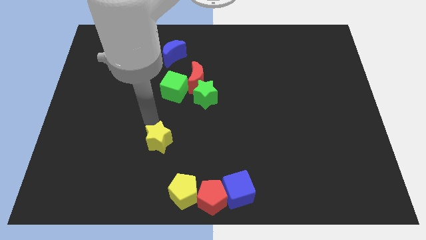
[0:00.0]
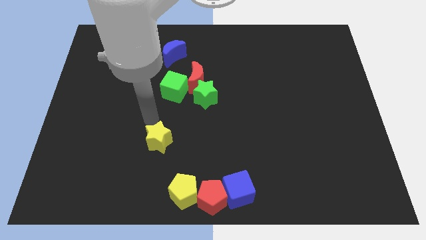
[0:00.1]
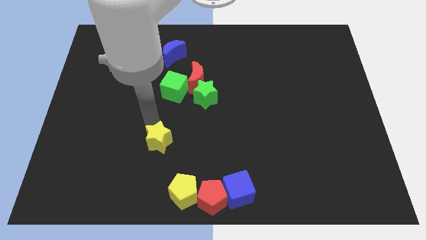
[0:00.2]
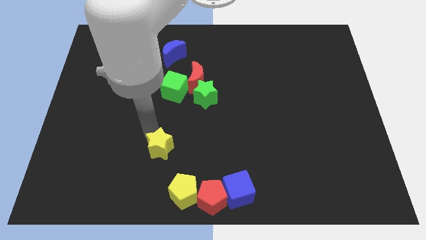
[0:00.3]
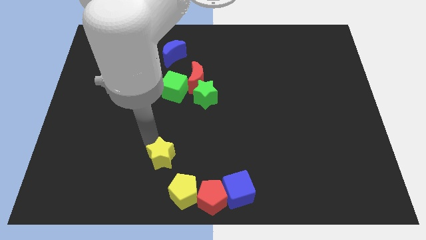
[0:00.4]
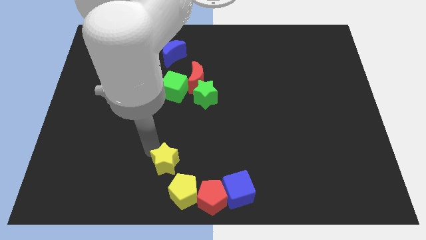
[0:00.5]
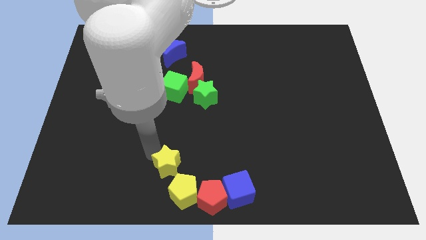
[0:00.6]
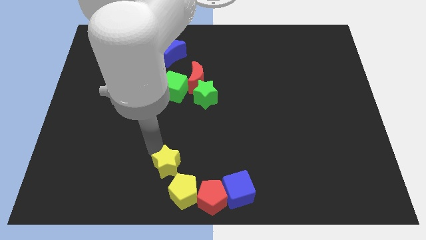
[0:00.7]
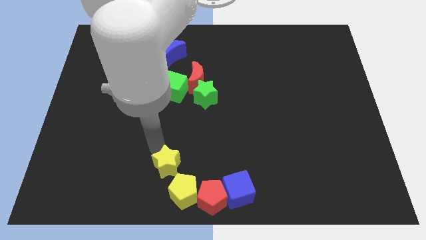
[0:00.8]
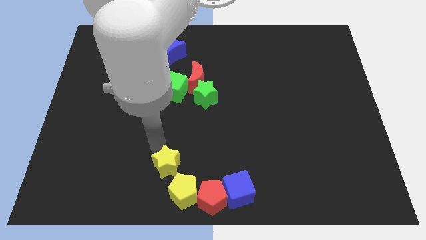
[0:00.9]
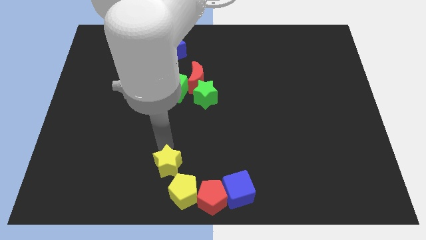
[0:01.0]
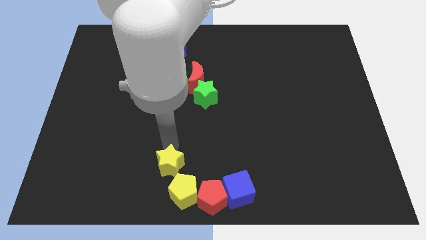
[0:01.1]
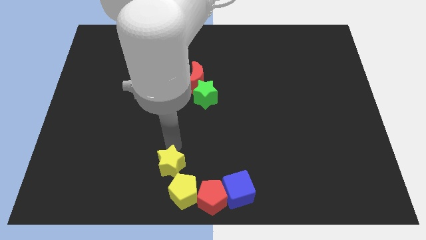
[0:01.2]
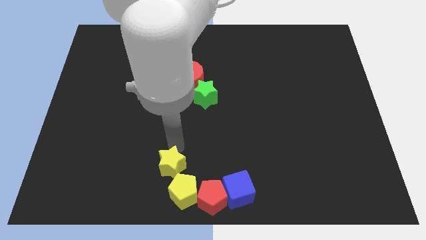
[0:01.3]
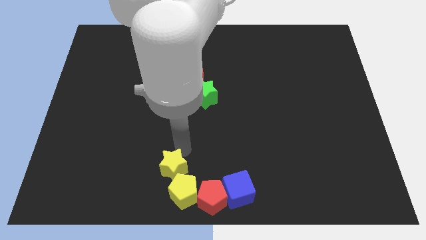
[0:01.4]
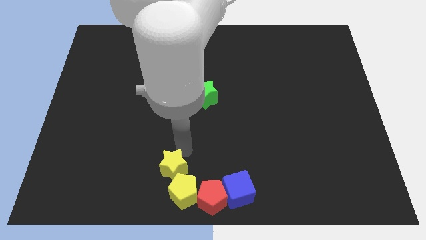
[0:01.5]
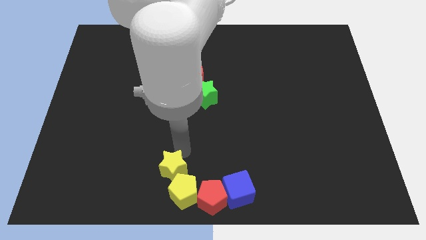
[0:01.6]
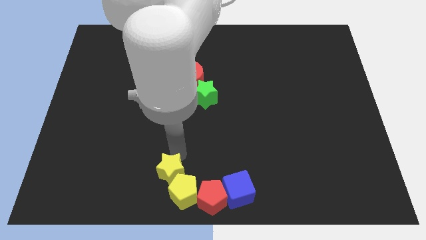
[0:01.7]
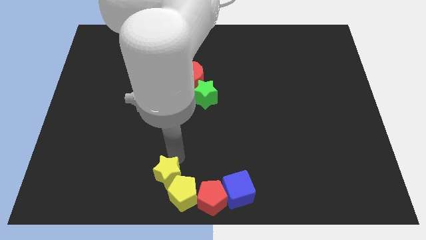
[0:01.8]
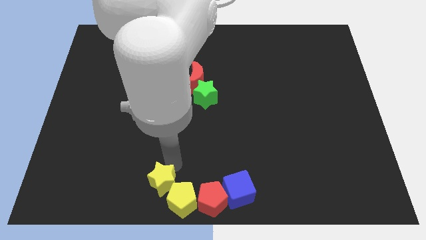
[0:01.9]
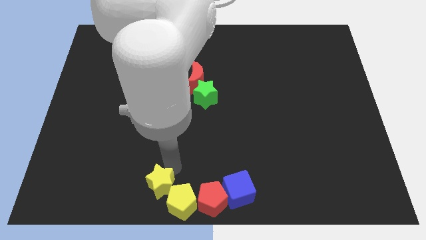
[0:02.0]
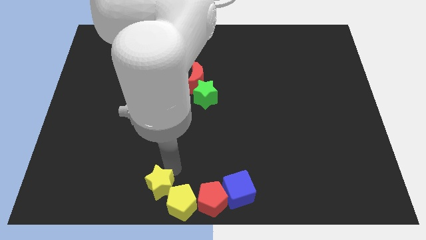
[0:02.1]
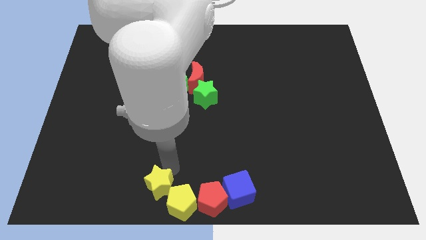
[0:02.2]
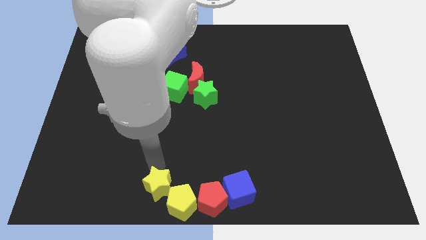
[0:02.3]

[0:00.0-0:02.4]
push the yellow star top left to the yellow pentagon

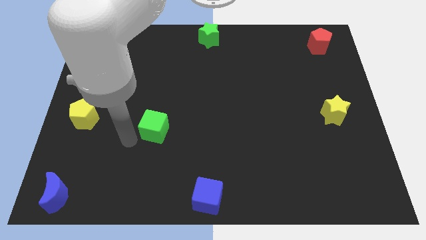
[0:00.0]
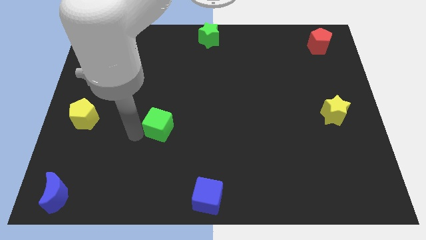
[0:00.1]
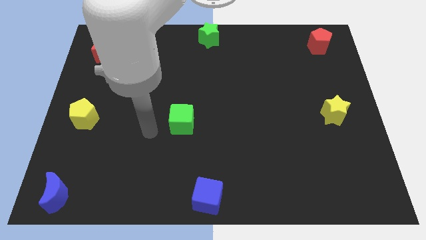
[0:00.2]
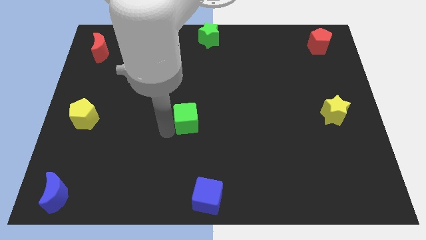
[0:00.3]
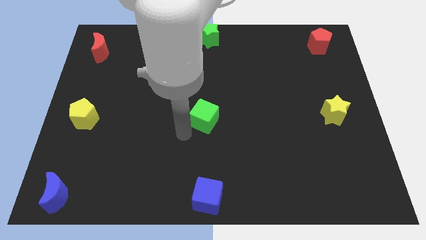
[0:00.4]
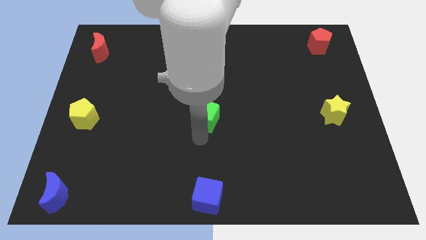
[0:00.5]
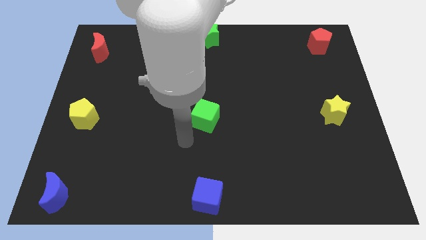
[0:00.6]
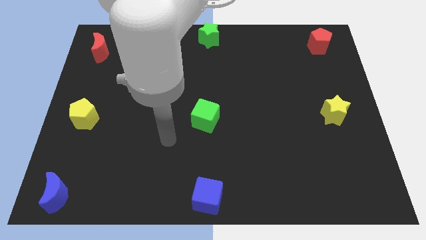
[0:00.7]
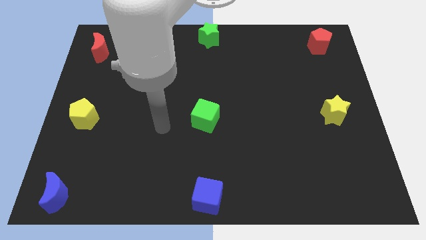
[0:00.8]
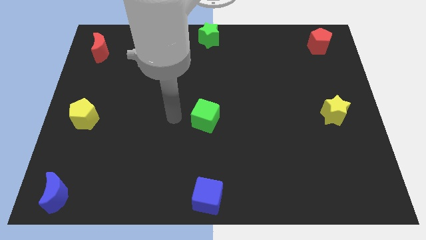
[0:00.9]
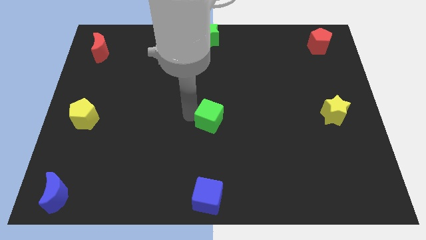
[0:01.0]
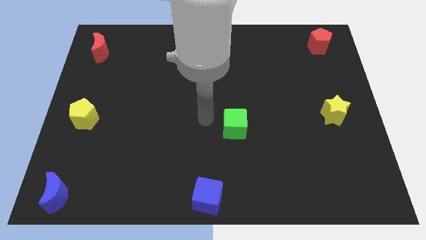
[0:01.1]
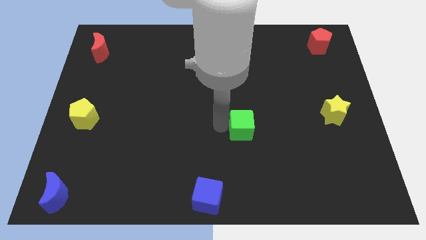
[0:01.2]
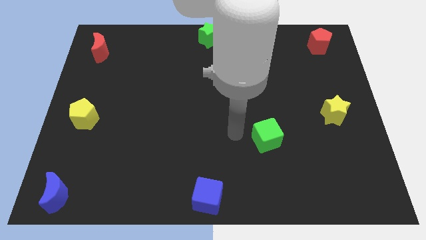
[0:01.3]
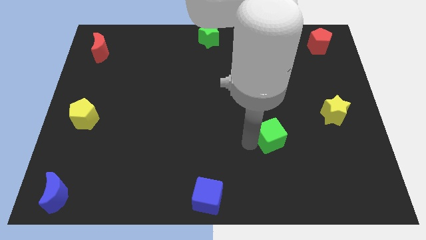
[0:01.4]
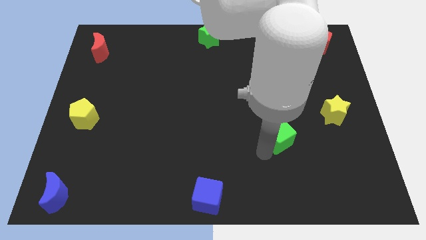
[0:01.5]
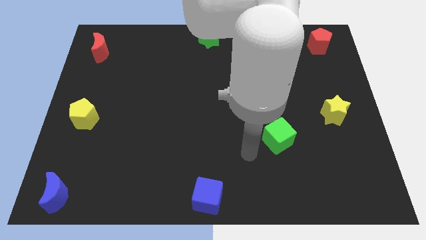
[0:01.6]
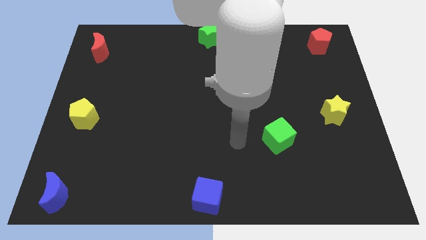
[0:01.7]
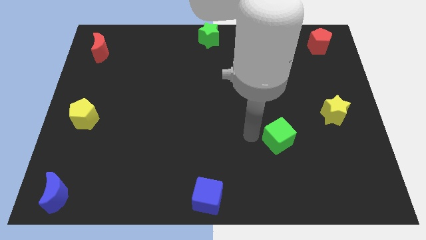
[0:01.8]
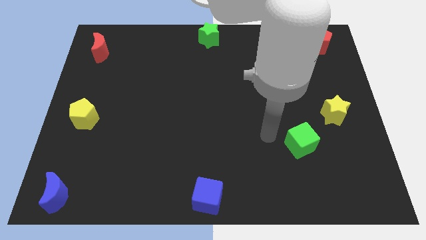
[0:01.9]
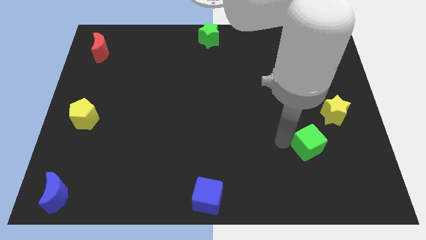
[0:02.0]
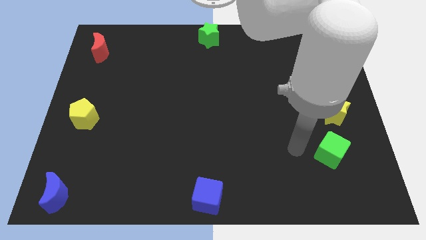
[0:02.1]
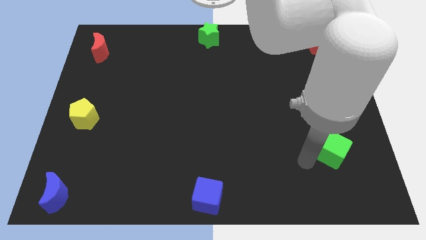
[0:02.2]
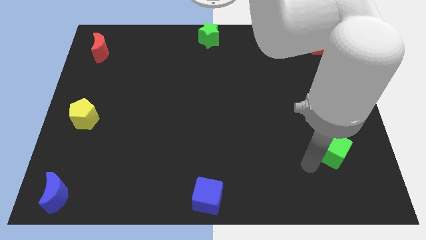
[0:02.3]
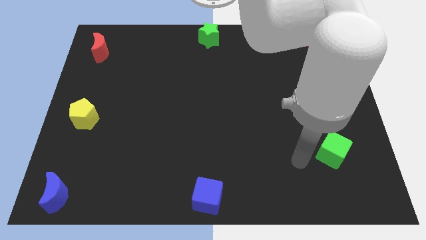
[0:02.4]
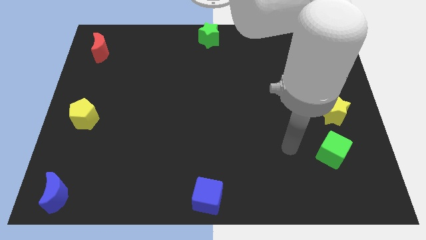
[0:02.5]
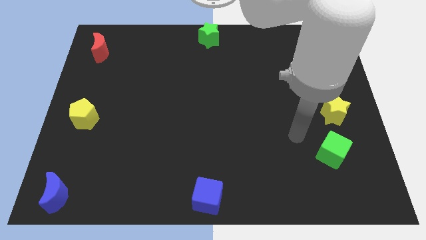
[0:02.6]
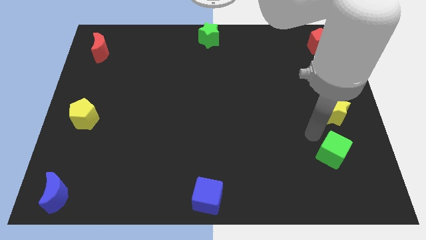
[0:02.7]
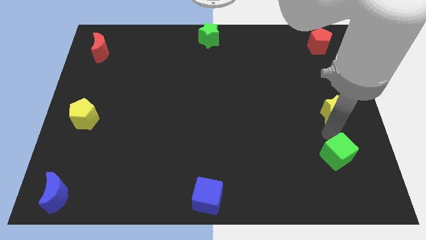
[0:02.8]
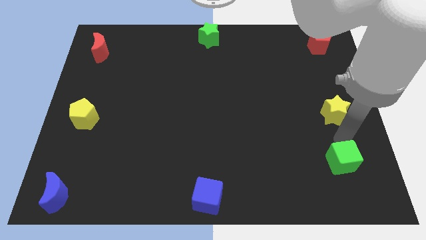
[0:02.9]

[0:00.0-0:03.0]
place green cube vertical to yellow star

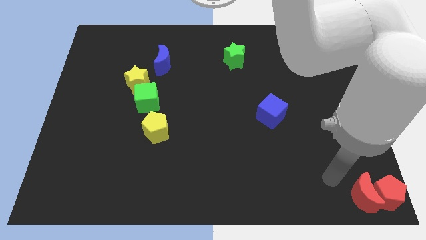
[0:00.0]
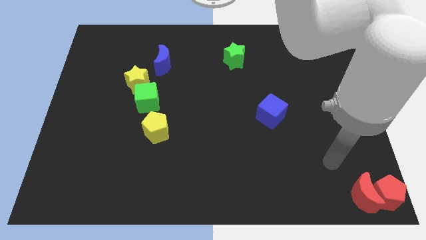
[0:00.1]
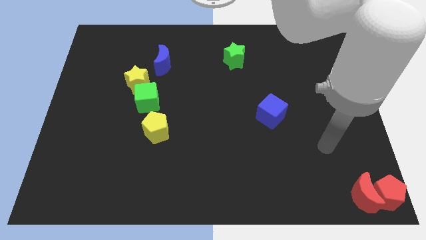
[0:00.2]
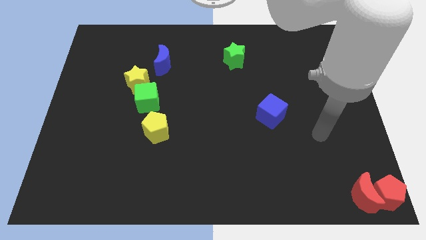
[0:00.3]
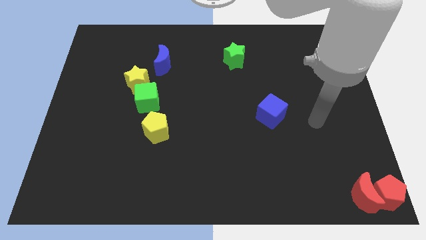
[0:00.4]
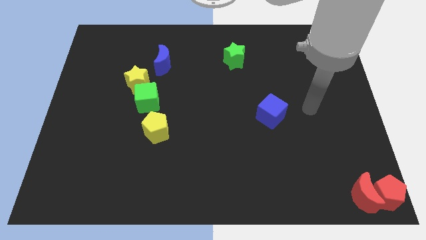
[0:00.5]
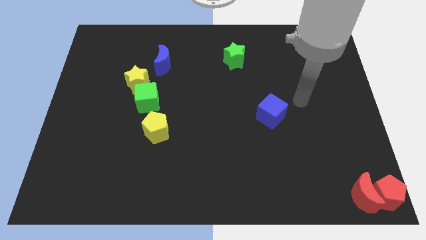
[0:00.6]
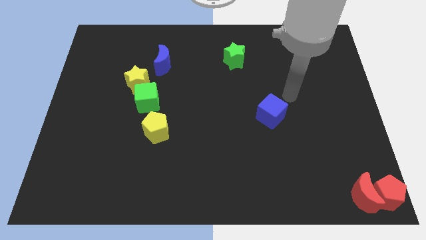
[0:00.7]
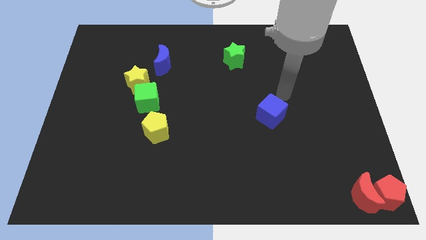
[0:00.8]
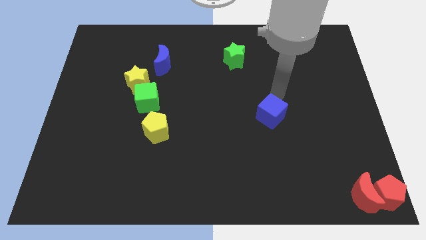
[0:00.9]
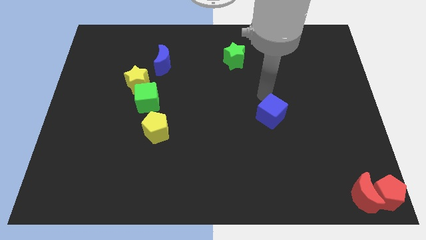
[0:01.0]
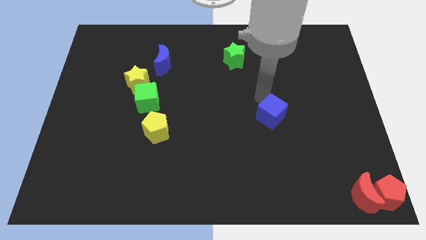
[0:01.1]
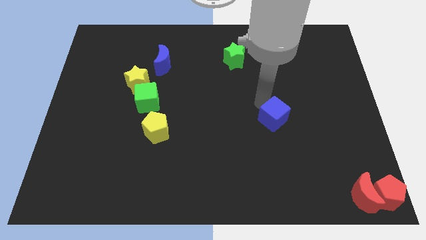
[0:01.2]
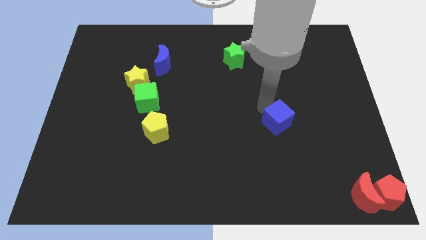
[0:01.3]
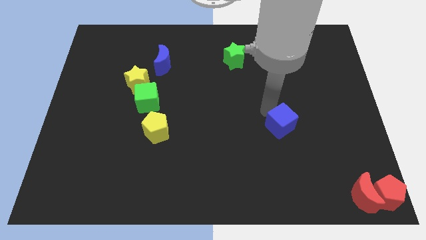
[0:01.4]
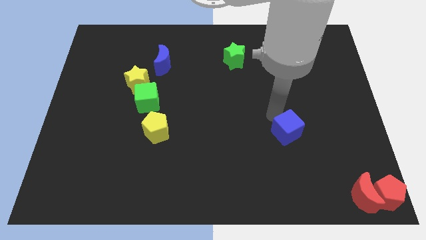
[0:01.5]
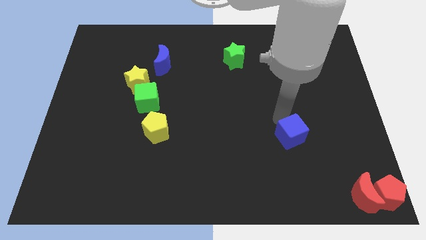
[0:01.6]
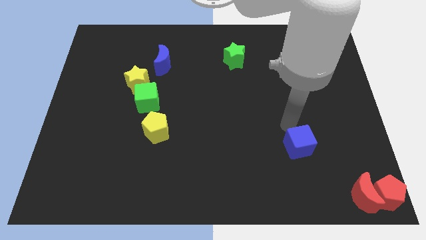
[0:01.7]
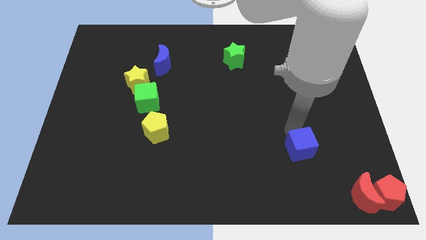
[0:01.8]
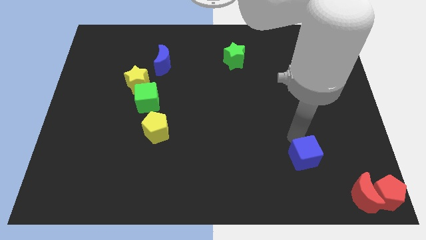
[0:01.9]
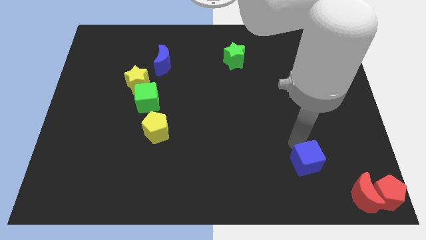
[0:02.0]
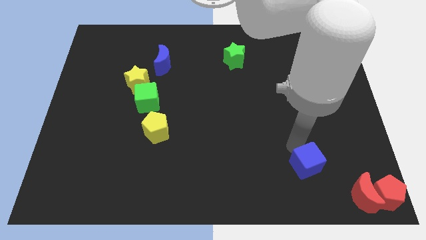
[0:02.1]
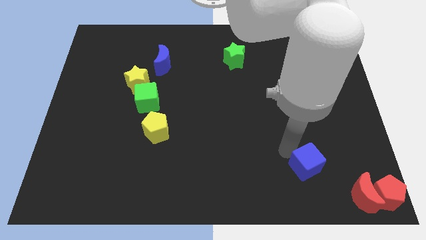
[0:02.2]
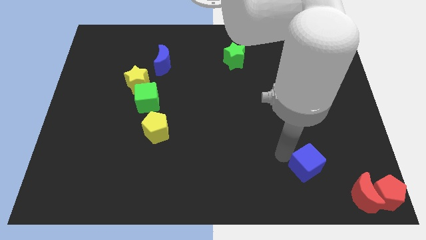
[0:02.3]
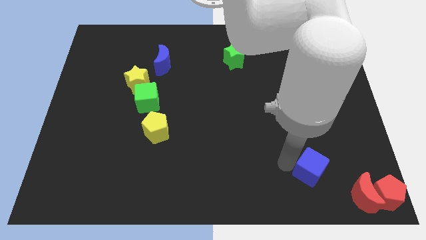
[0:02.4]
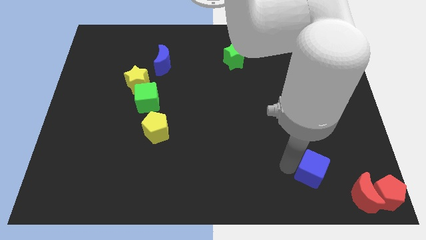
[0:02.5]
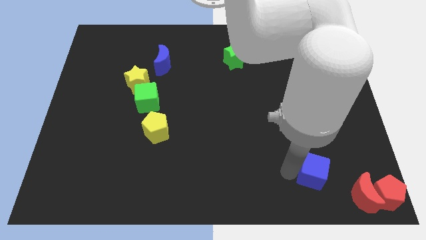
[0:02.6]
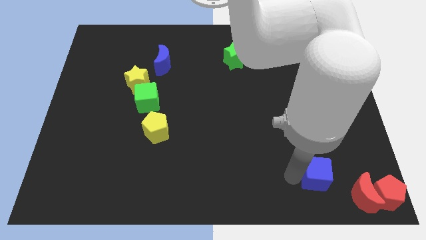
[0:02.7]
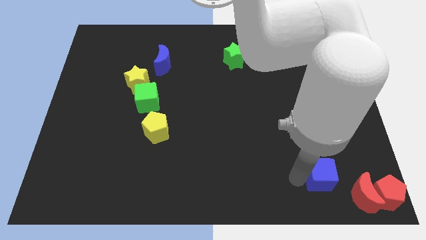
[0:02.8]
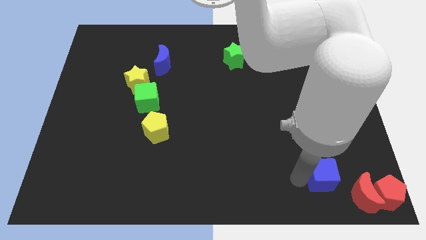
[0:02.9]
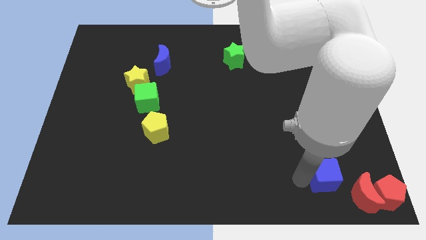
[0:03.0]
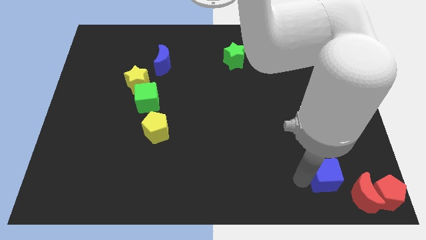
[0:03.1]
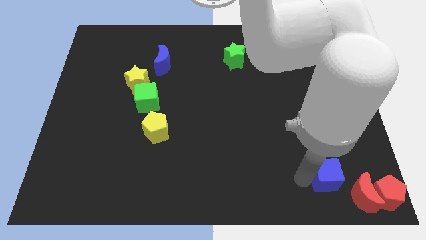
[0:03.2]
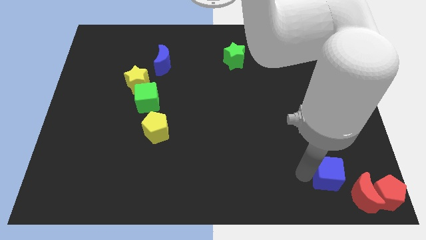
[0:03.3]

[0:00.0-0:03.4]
push the blue cube towards the left side of the red moon

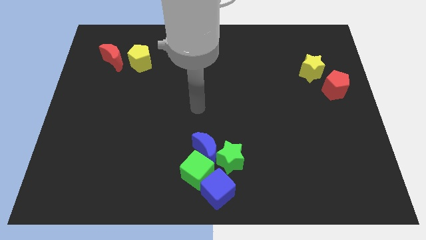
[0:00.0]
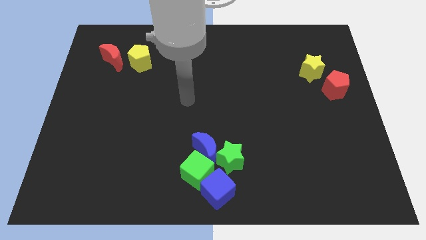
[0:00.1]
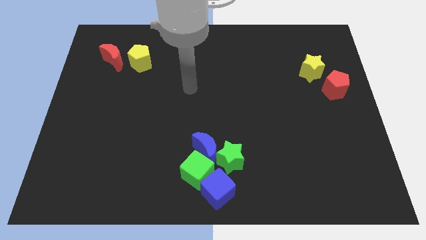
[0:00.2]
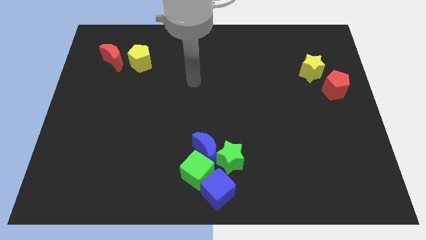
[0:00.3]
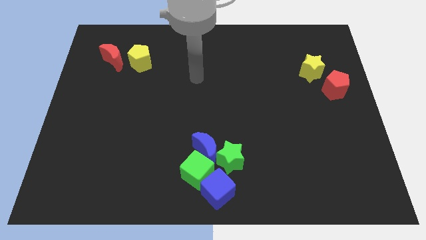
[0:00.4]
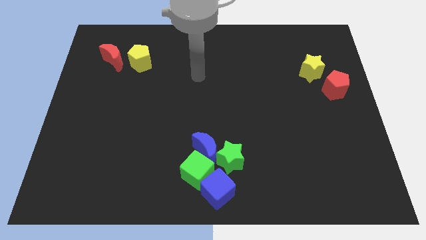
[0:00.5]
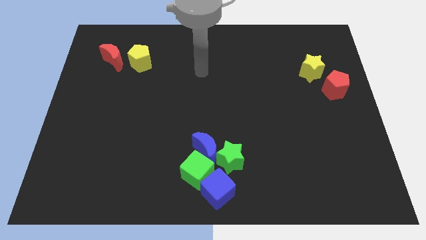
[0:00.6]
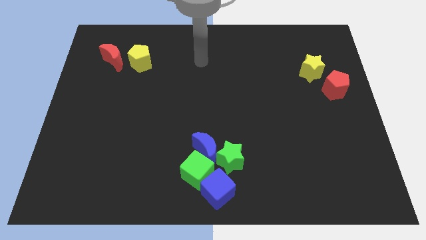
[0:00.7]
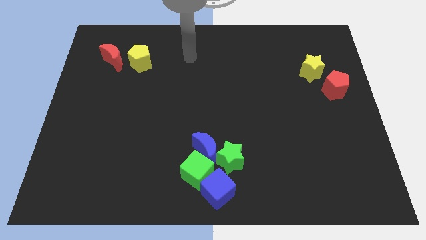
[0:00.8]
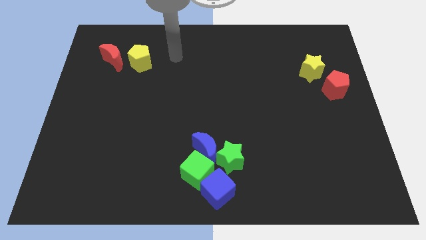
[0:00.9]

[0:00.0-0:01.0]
move the arm towards the yellow pentagon
